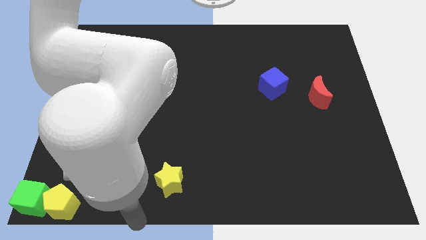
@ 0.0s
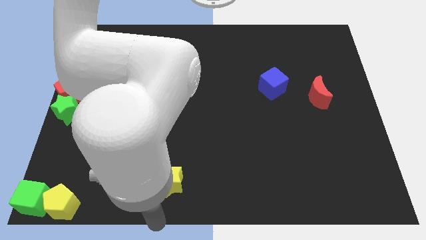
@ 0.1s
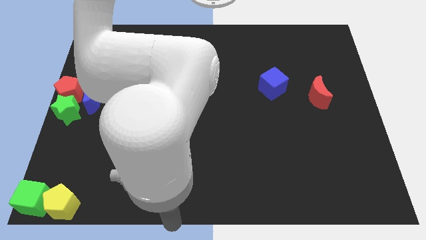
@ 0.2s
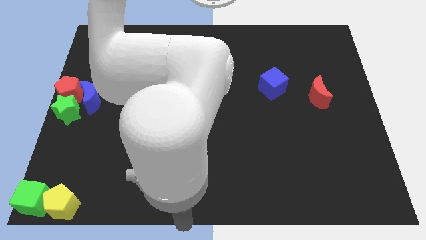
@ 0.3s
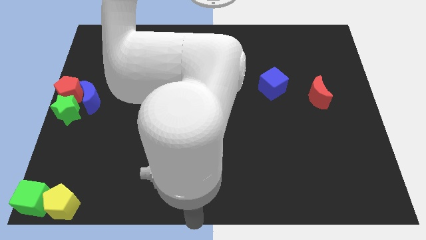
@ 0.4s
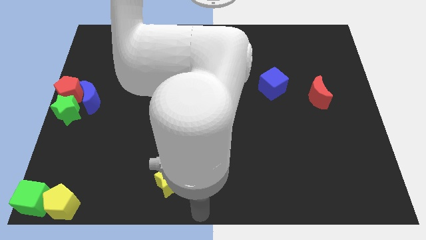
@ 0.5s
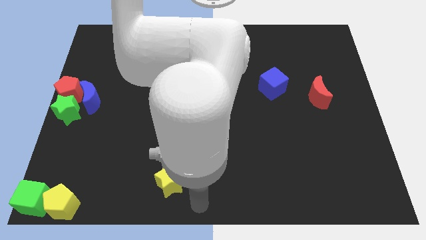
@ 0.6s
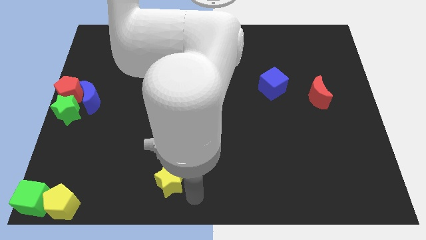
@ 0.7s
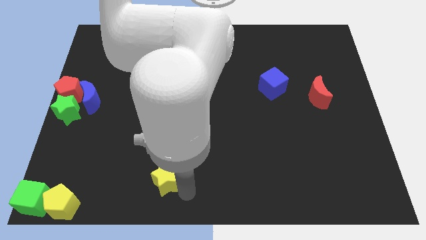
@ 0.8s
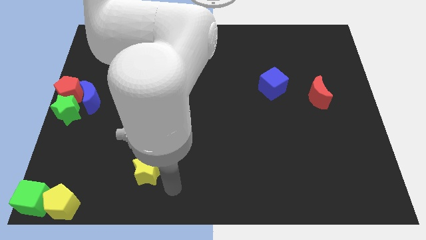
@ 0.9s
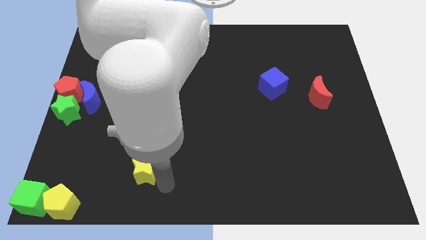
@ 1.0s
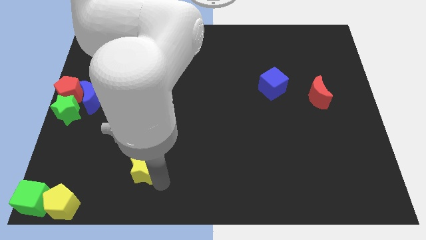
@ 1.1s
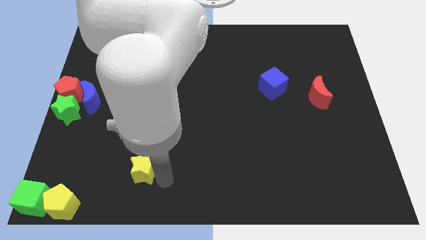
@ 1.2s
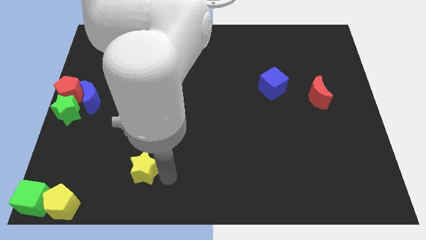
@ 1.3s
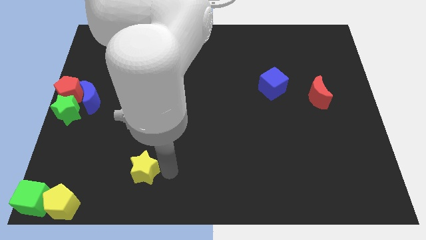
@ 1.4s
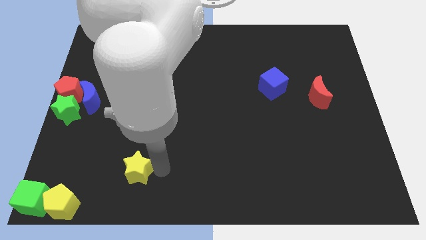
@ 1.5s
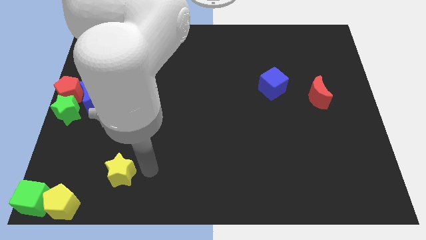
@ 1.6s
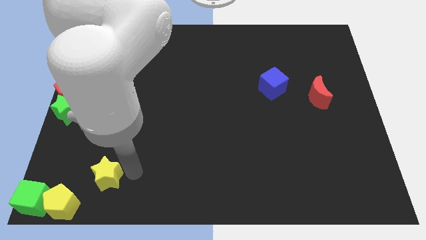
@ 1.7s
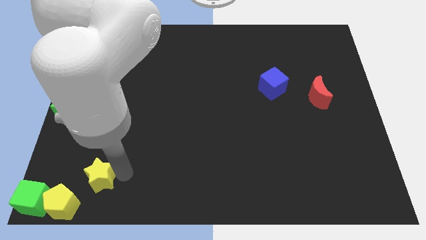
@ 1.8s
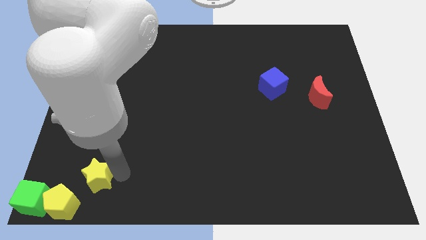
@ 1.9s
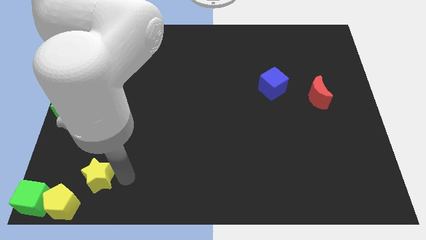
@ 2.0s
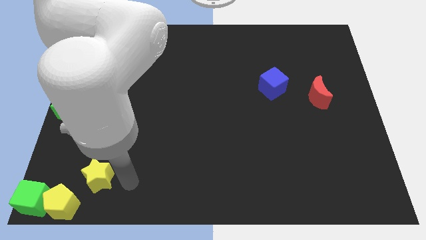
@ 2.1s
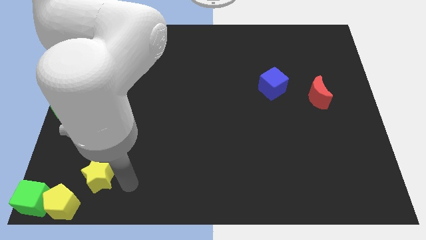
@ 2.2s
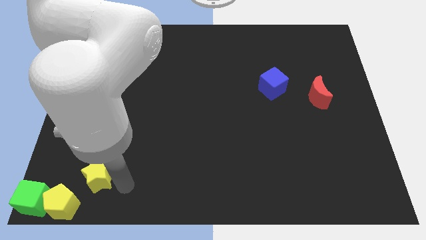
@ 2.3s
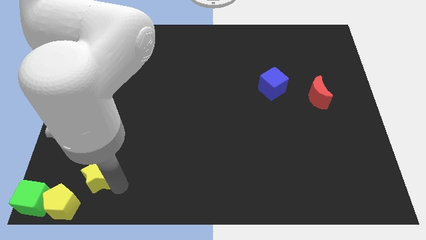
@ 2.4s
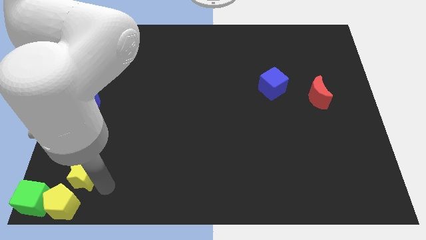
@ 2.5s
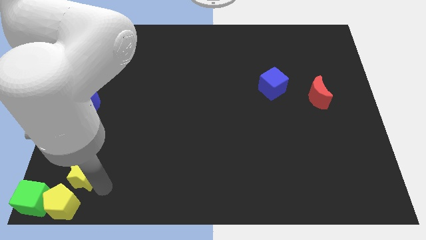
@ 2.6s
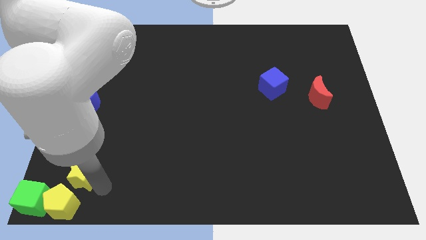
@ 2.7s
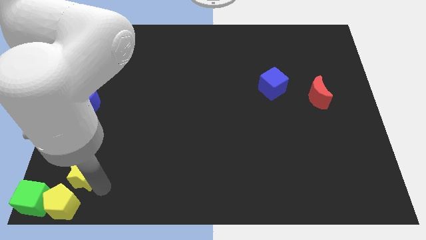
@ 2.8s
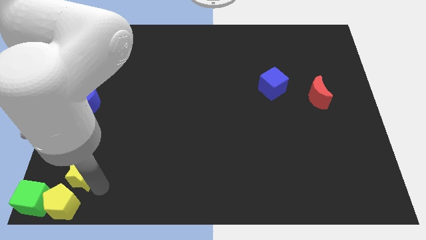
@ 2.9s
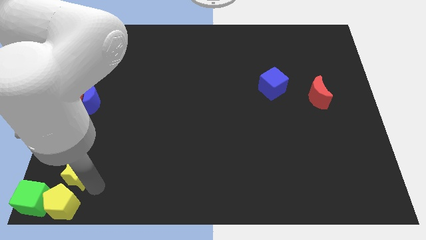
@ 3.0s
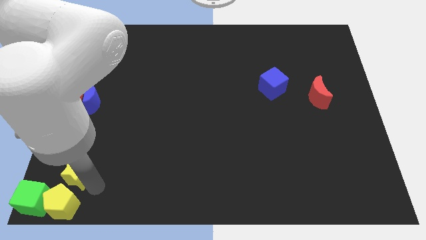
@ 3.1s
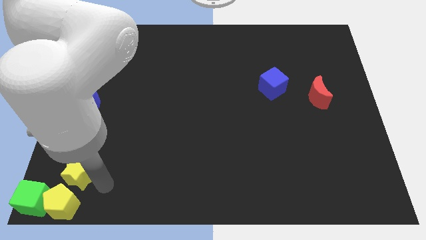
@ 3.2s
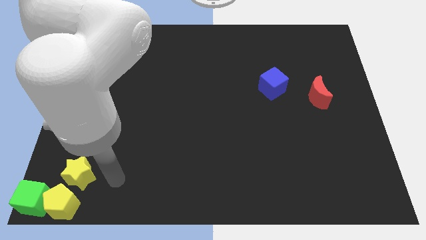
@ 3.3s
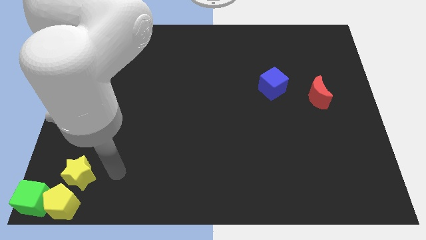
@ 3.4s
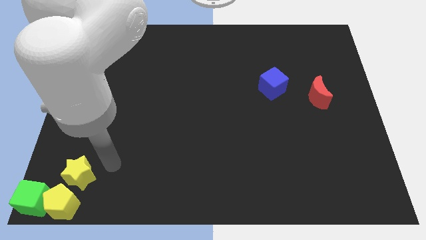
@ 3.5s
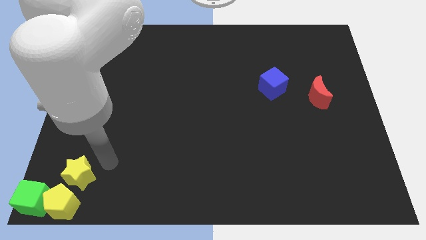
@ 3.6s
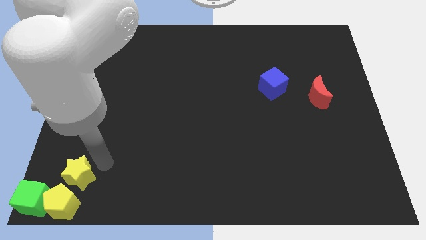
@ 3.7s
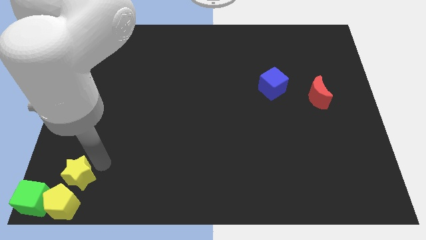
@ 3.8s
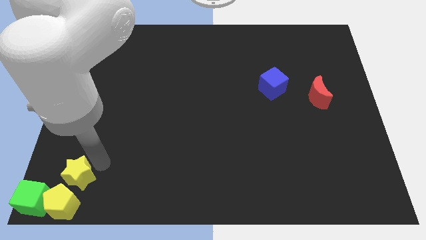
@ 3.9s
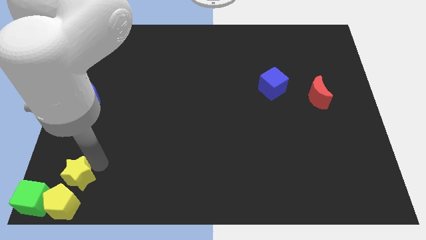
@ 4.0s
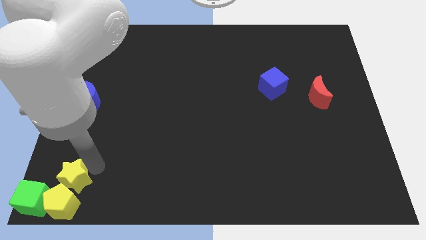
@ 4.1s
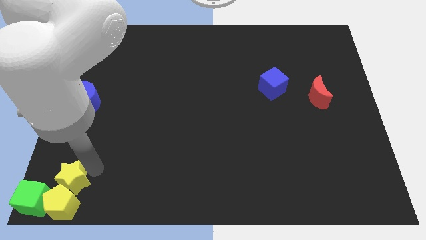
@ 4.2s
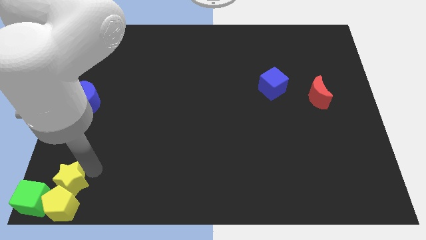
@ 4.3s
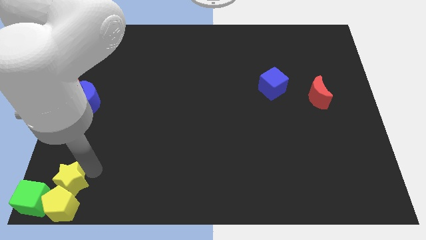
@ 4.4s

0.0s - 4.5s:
push the yellow star to the top of yellow pentagon

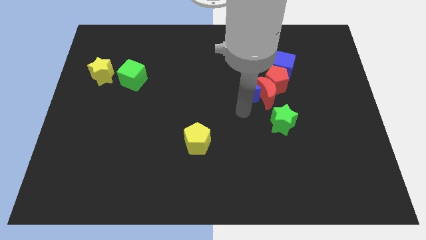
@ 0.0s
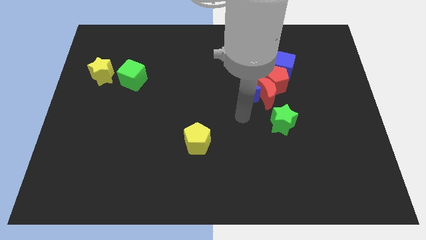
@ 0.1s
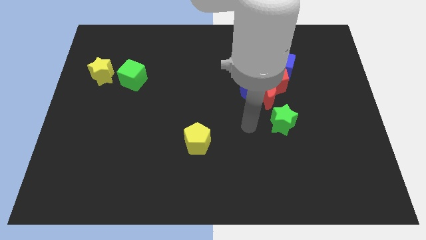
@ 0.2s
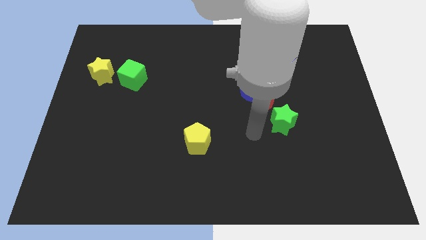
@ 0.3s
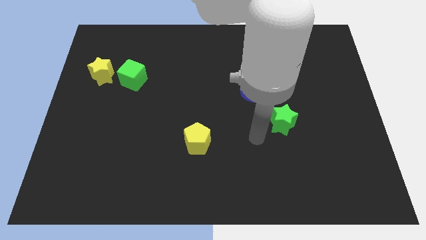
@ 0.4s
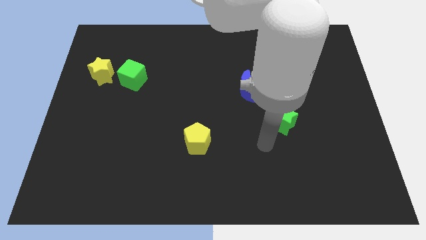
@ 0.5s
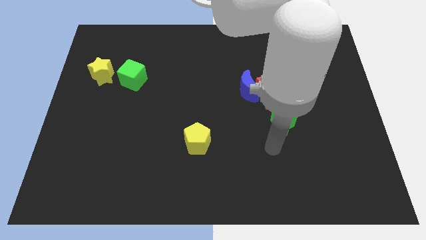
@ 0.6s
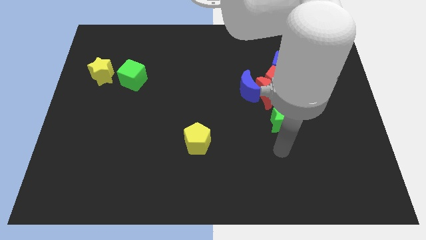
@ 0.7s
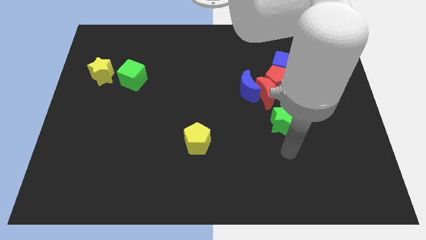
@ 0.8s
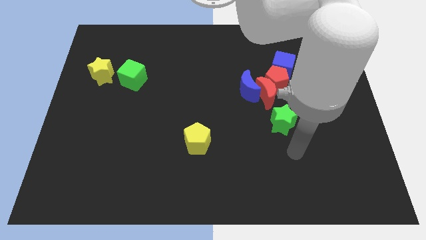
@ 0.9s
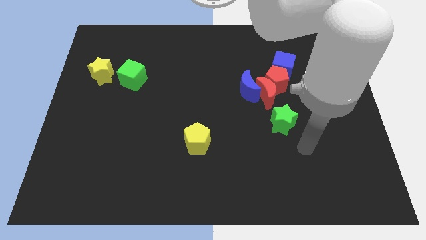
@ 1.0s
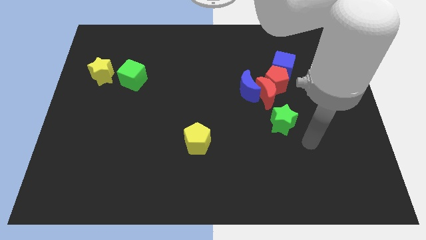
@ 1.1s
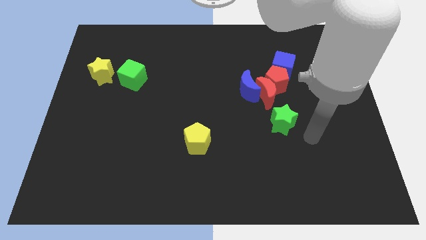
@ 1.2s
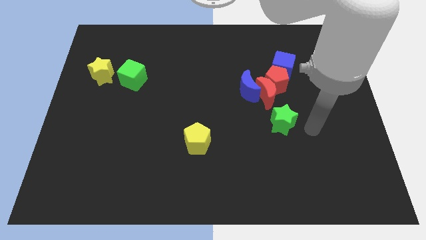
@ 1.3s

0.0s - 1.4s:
move the arm to the right side of the green star

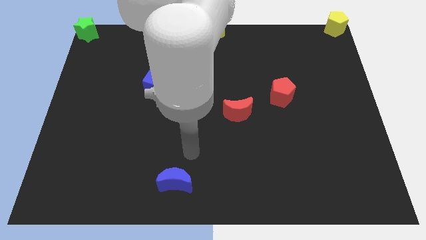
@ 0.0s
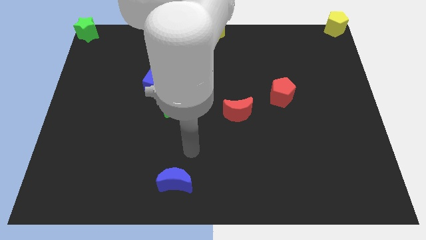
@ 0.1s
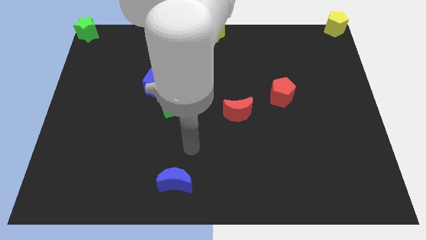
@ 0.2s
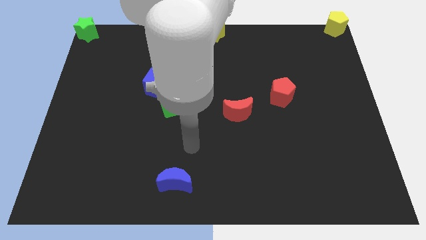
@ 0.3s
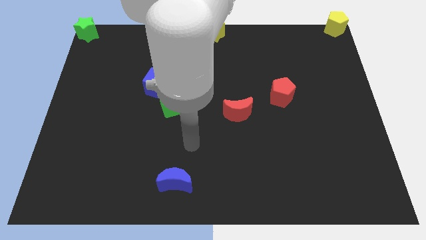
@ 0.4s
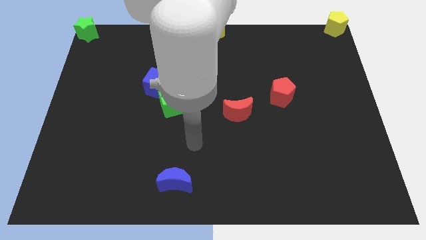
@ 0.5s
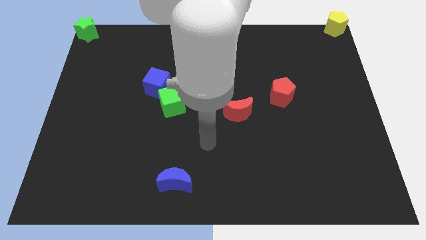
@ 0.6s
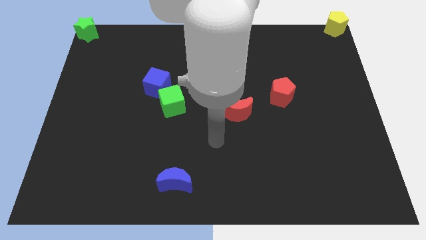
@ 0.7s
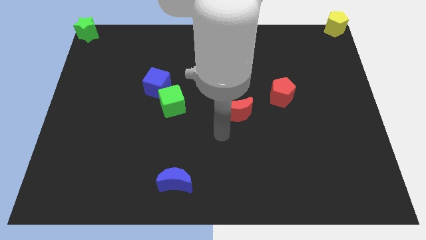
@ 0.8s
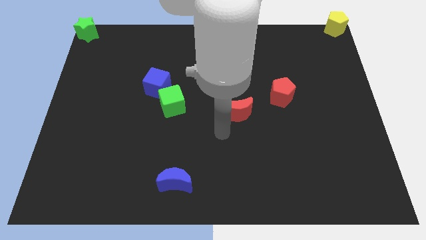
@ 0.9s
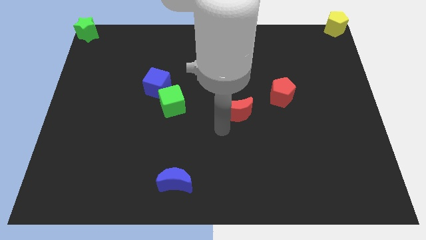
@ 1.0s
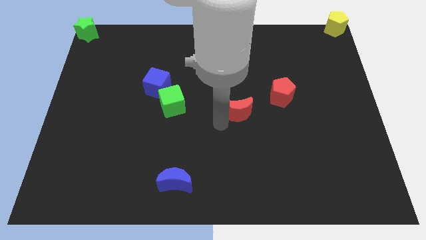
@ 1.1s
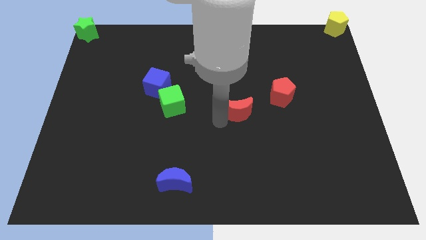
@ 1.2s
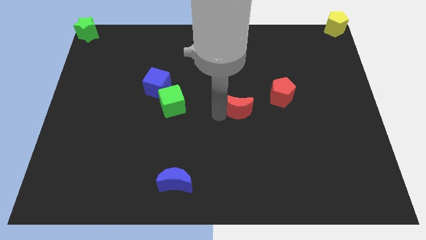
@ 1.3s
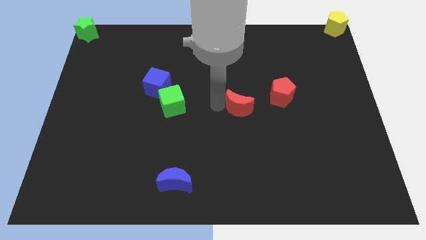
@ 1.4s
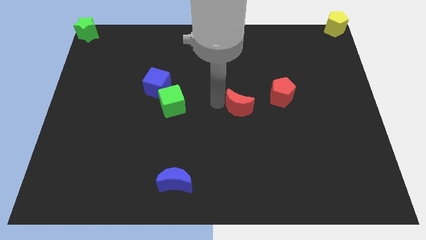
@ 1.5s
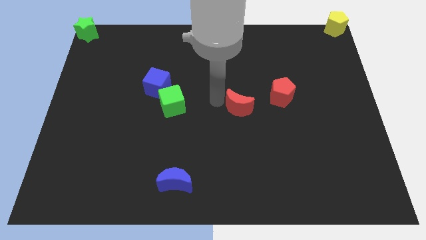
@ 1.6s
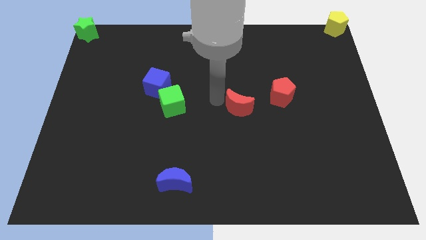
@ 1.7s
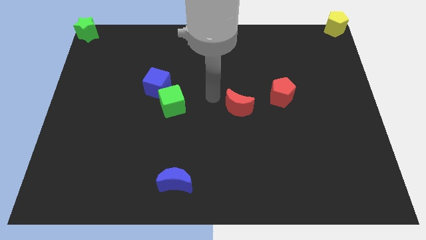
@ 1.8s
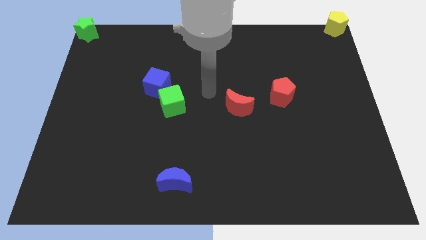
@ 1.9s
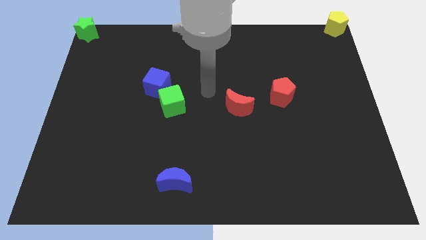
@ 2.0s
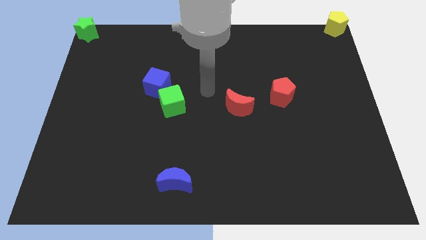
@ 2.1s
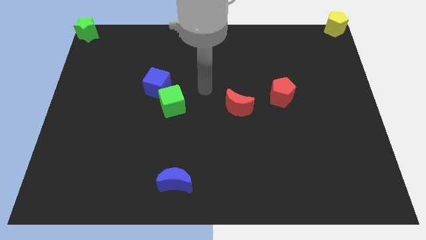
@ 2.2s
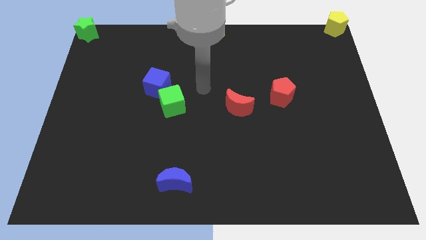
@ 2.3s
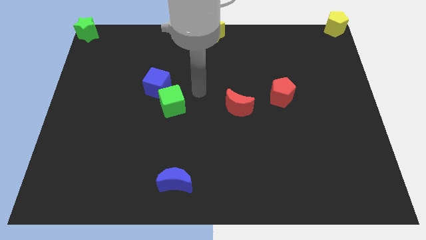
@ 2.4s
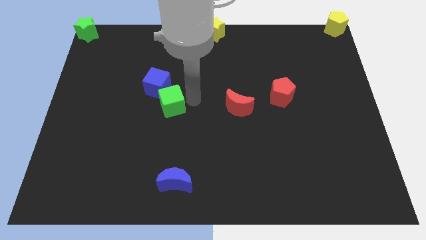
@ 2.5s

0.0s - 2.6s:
slightly push the red moon towards red pentagon

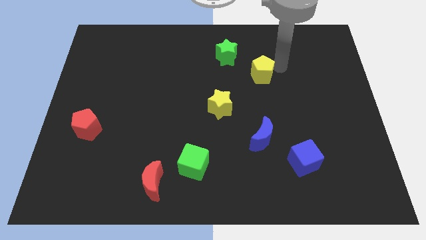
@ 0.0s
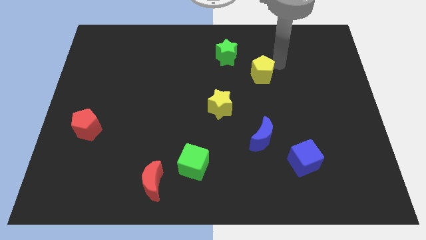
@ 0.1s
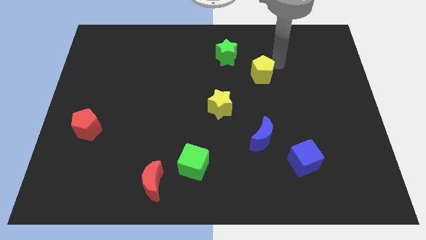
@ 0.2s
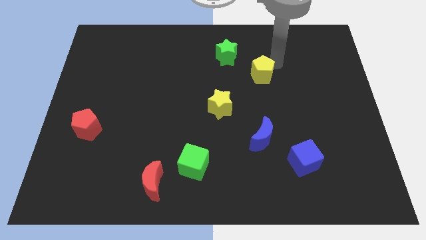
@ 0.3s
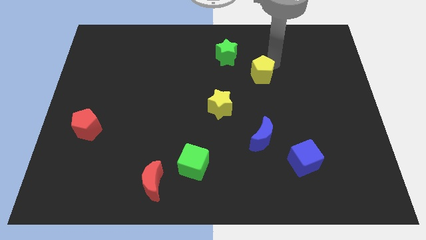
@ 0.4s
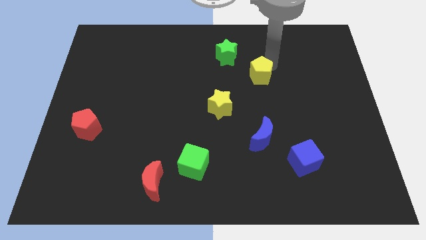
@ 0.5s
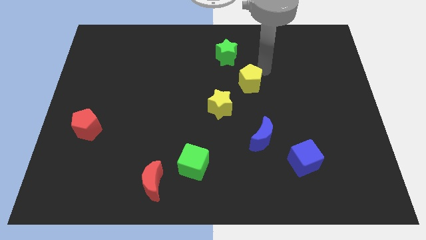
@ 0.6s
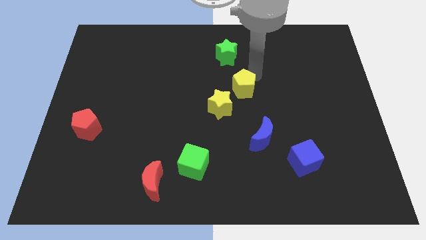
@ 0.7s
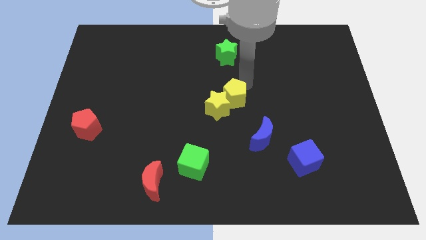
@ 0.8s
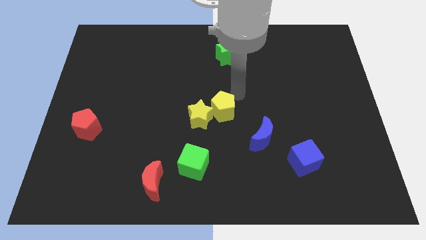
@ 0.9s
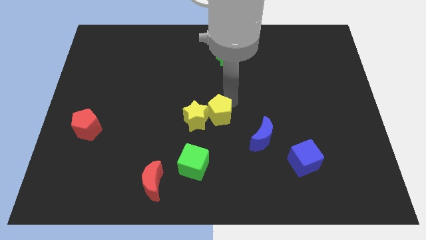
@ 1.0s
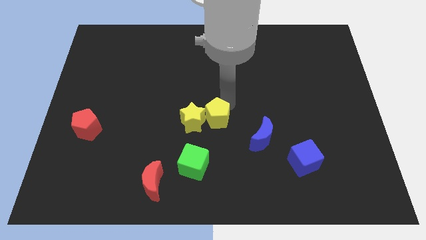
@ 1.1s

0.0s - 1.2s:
push yellow blocks to bottom center
